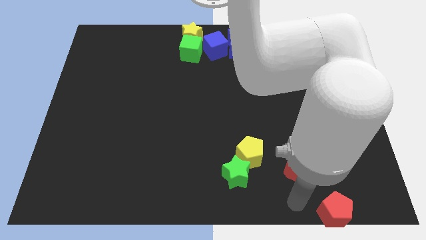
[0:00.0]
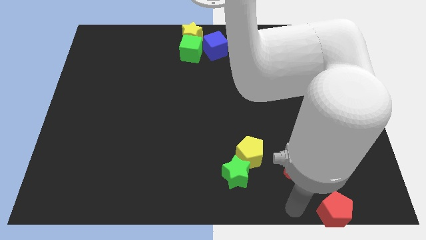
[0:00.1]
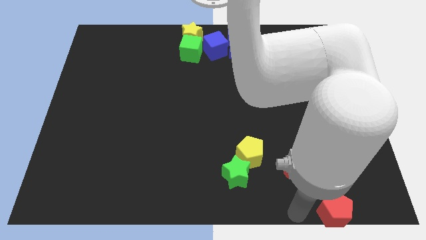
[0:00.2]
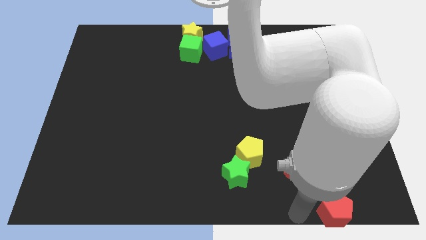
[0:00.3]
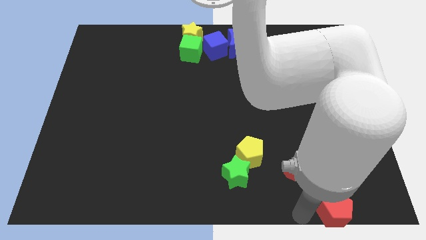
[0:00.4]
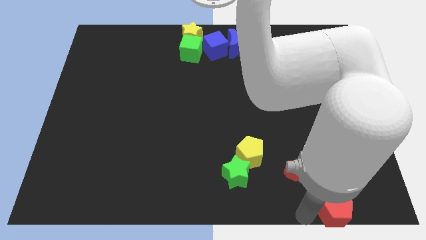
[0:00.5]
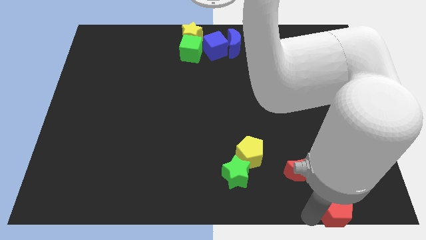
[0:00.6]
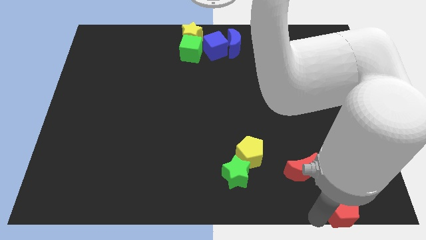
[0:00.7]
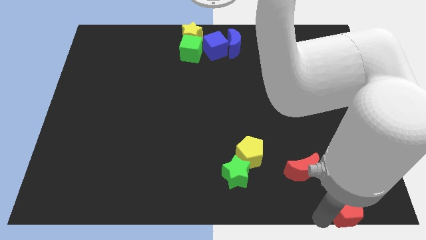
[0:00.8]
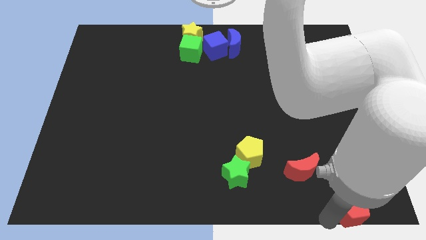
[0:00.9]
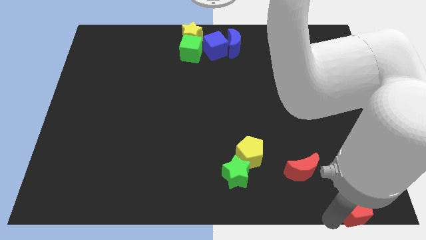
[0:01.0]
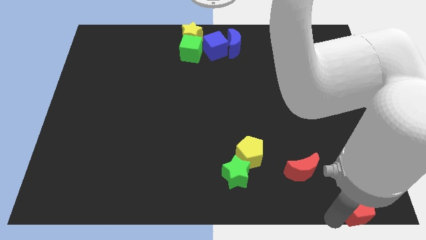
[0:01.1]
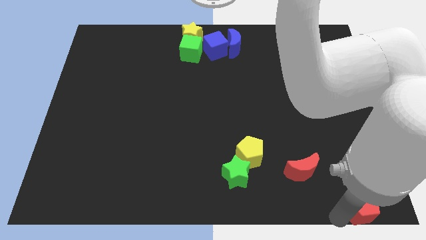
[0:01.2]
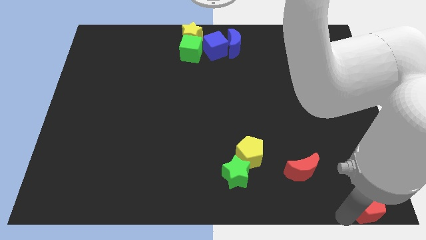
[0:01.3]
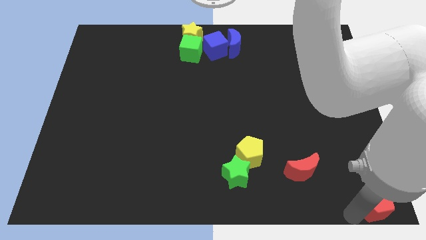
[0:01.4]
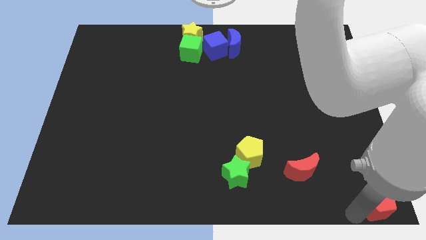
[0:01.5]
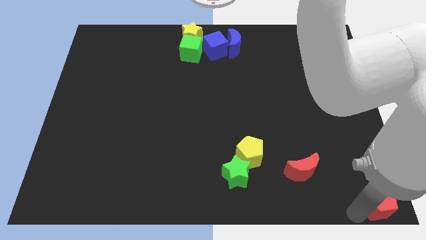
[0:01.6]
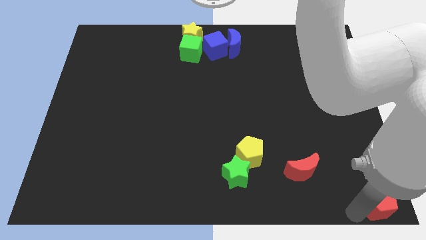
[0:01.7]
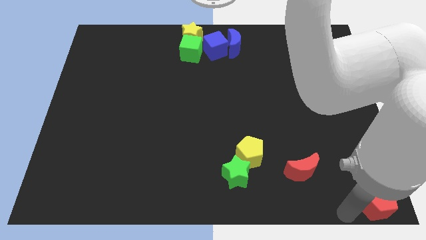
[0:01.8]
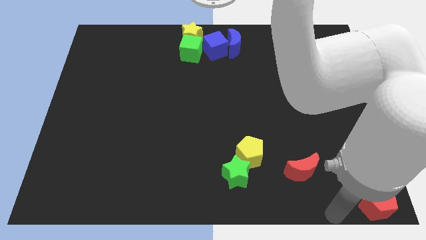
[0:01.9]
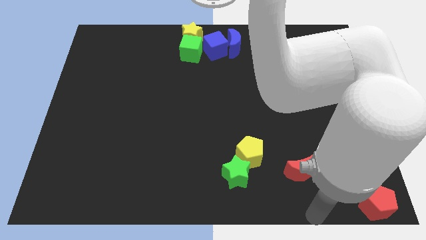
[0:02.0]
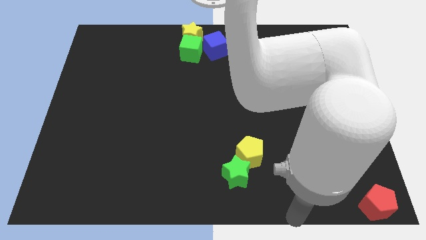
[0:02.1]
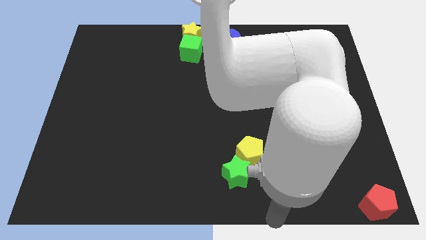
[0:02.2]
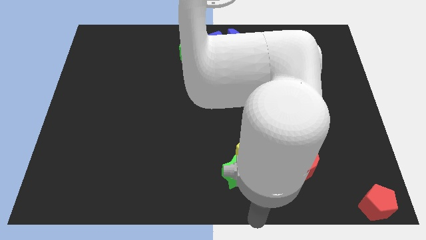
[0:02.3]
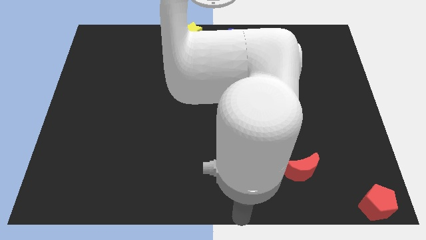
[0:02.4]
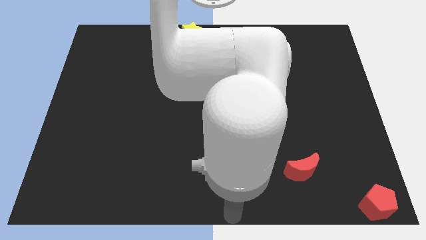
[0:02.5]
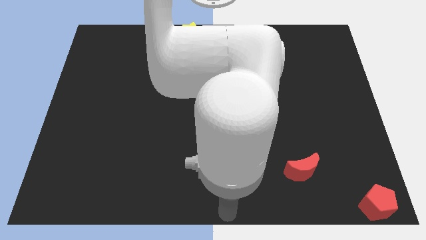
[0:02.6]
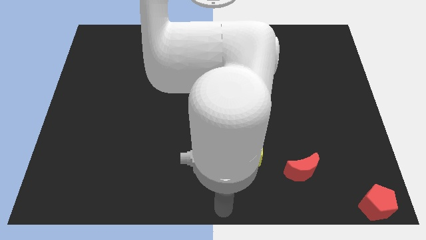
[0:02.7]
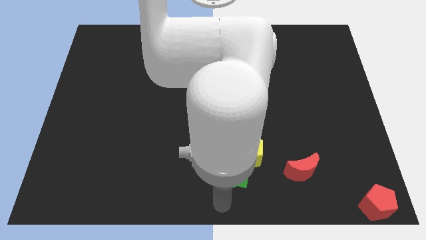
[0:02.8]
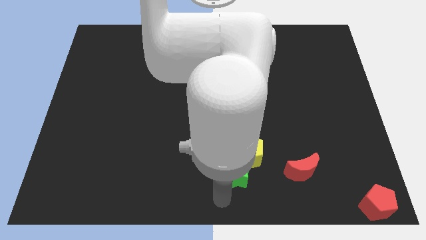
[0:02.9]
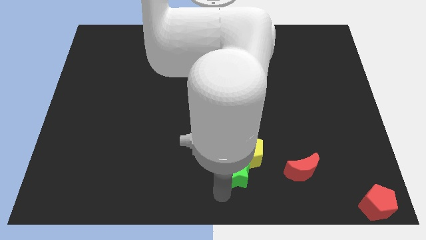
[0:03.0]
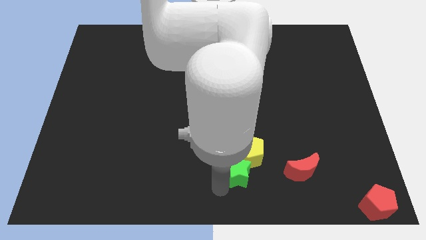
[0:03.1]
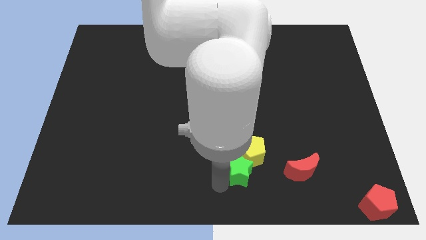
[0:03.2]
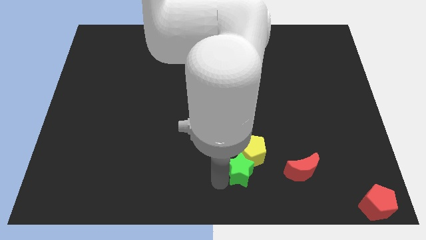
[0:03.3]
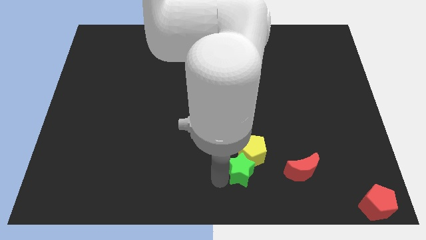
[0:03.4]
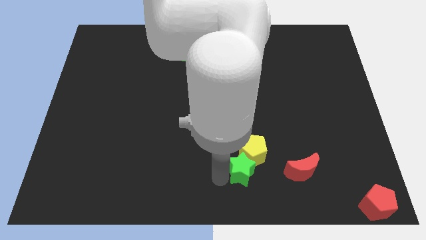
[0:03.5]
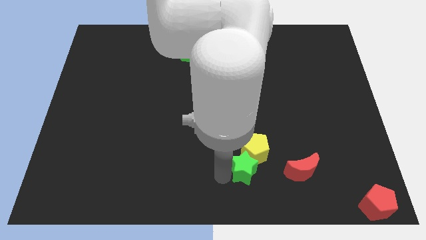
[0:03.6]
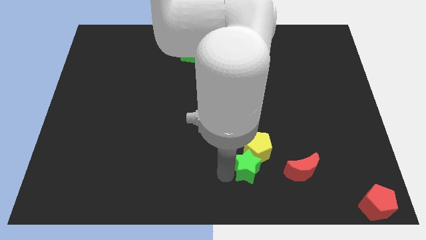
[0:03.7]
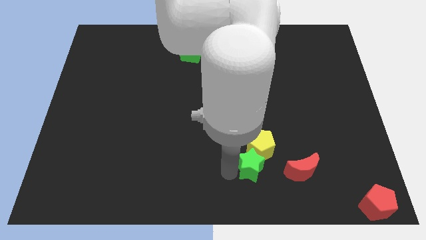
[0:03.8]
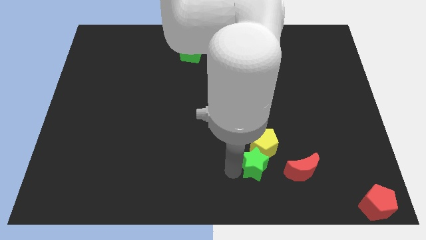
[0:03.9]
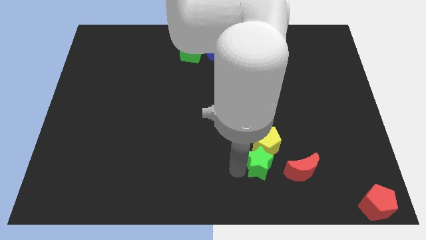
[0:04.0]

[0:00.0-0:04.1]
push red pentagon yellow pentagon green star towards right side of the board

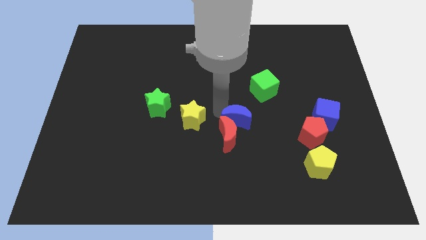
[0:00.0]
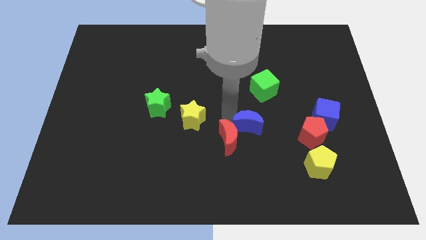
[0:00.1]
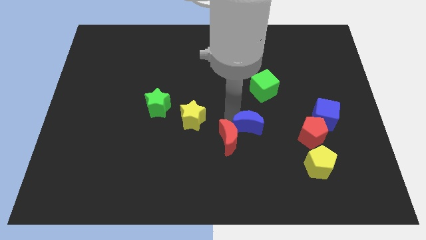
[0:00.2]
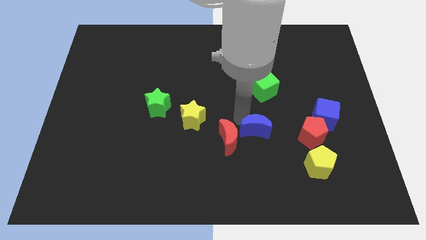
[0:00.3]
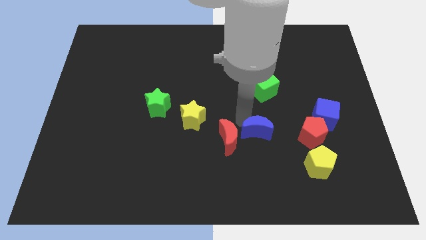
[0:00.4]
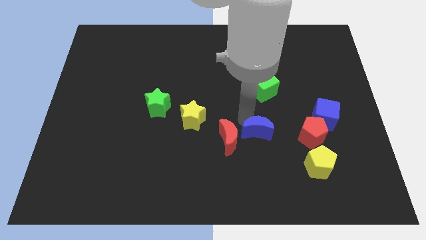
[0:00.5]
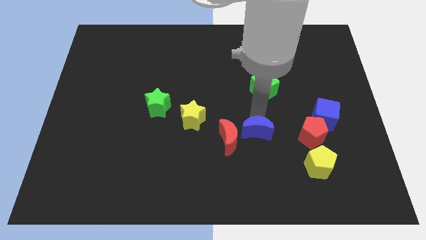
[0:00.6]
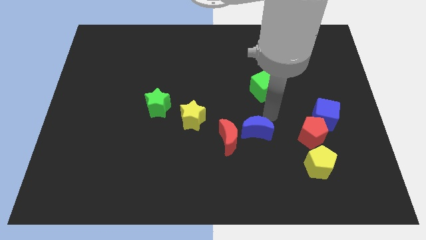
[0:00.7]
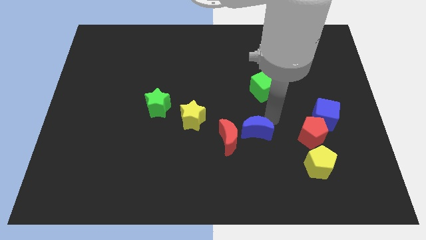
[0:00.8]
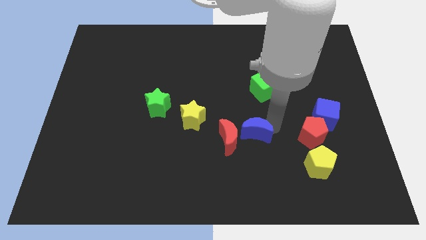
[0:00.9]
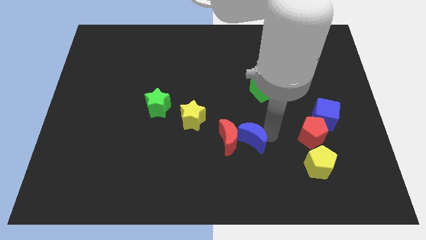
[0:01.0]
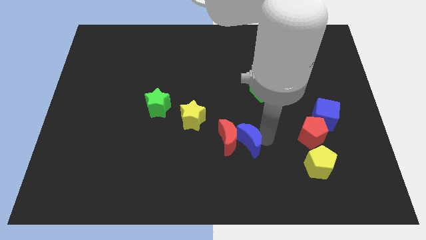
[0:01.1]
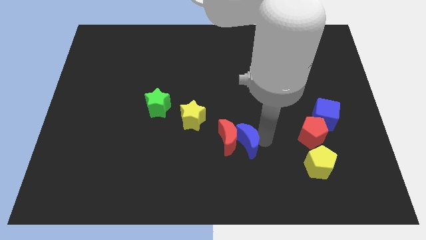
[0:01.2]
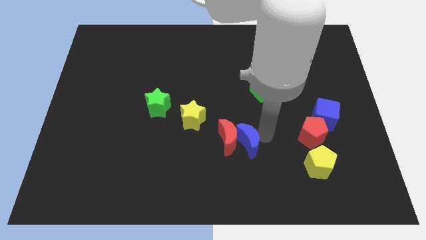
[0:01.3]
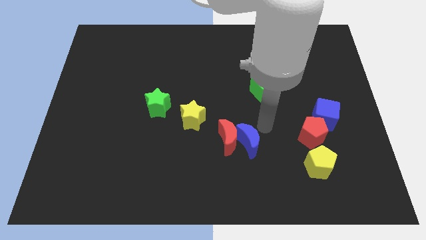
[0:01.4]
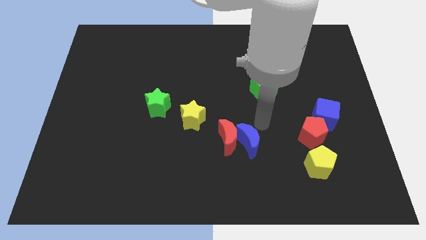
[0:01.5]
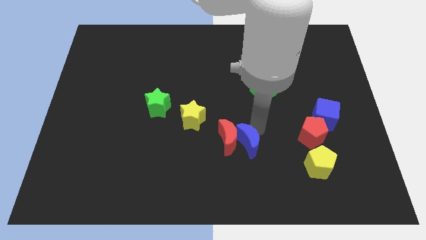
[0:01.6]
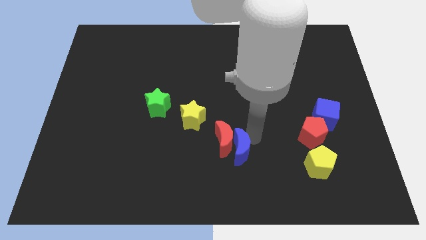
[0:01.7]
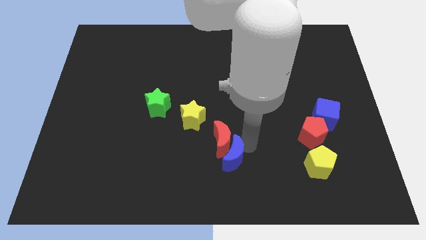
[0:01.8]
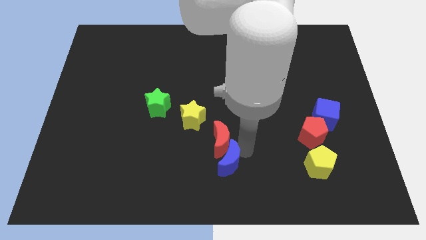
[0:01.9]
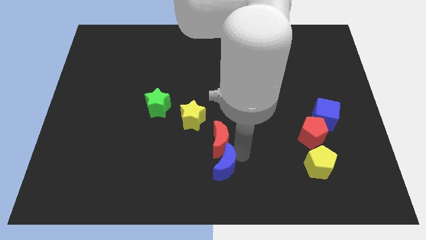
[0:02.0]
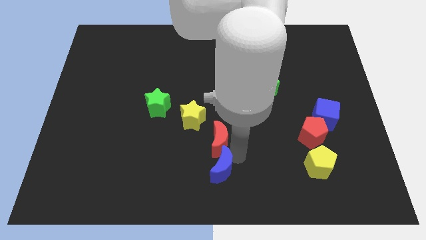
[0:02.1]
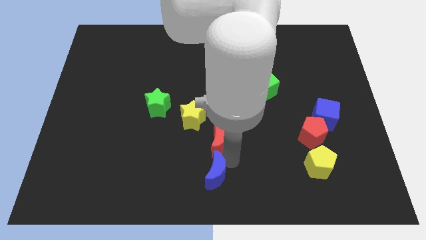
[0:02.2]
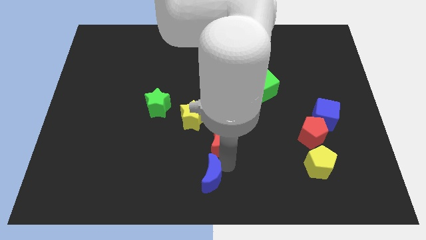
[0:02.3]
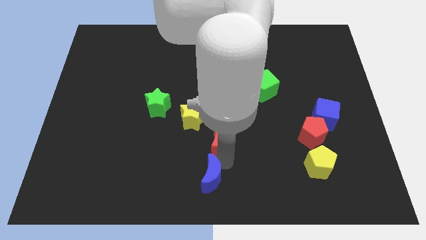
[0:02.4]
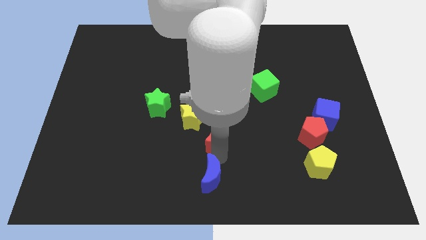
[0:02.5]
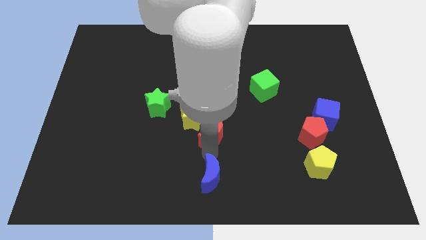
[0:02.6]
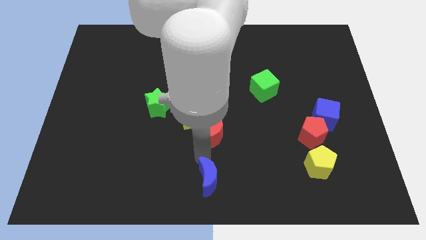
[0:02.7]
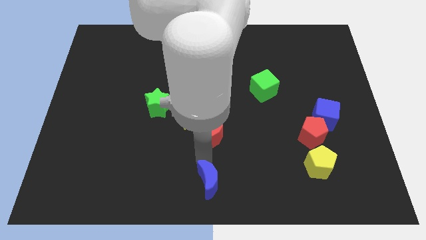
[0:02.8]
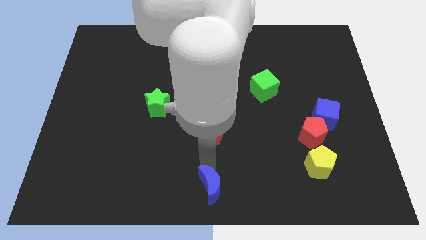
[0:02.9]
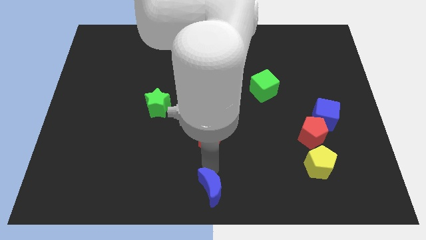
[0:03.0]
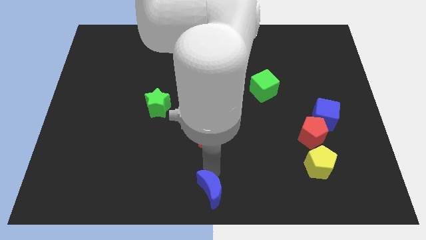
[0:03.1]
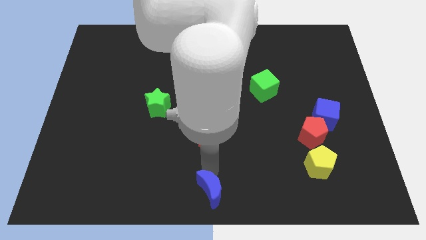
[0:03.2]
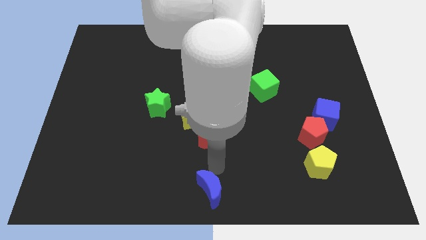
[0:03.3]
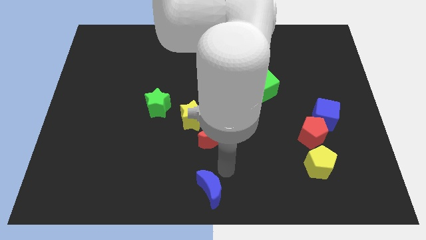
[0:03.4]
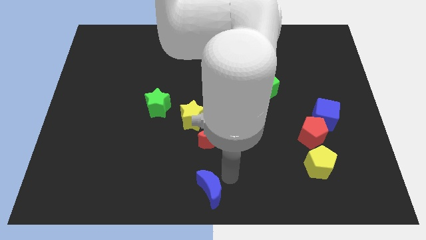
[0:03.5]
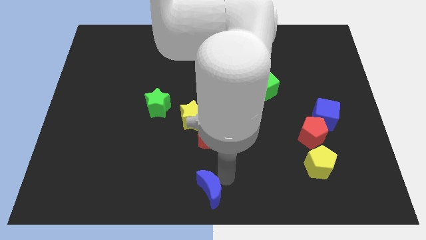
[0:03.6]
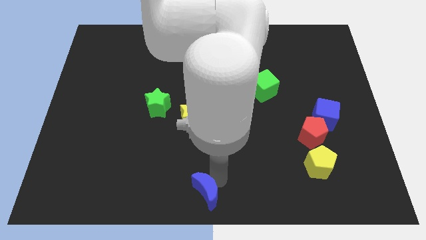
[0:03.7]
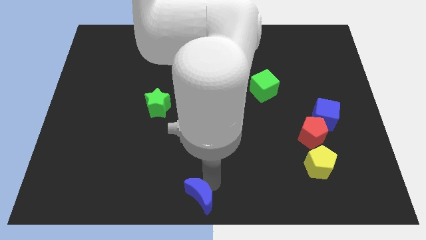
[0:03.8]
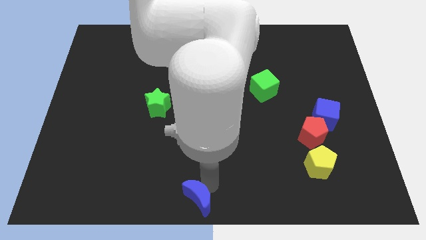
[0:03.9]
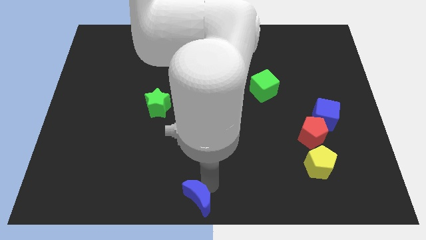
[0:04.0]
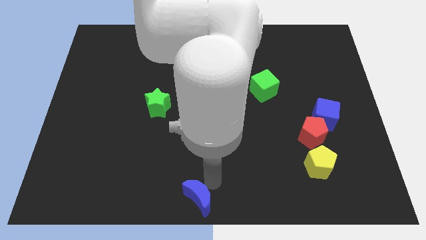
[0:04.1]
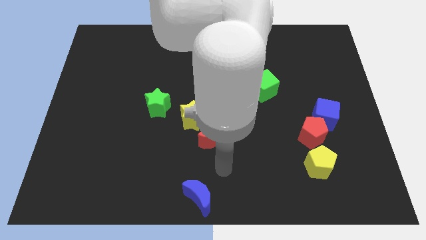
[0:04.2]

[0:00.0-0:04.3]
move the blue crescent to the bottom center of the board

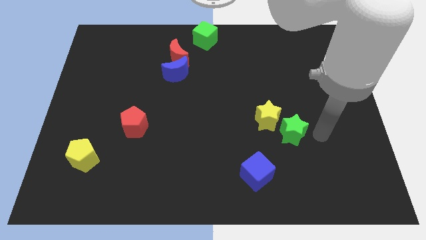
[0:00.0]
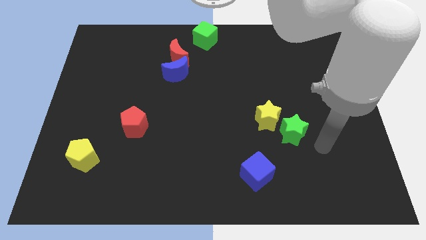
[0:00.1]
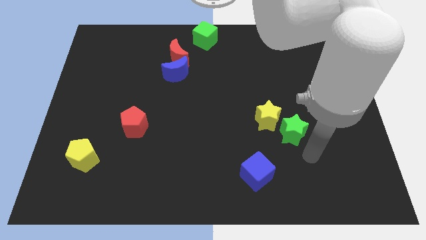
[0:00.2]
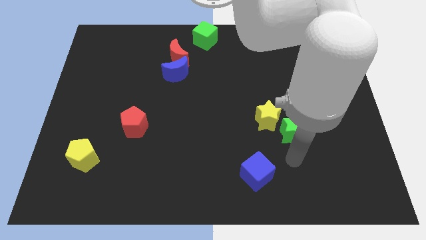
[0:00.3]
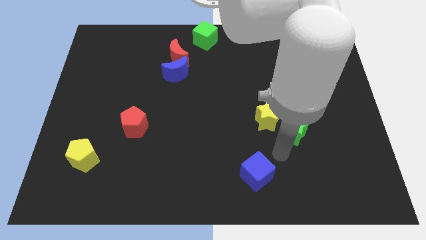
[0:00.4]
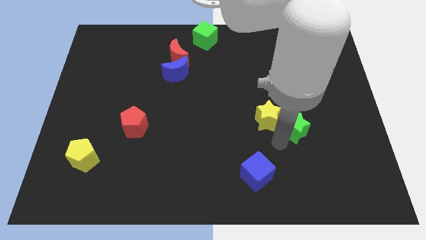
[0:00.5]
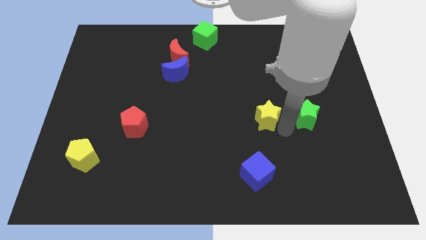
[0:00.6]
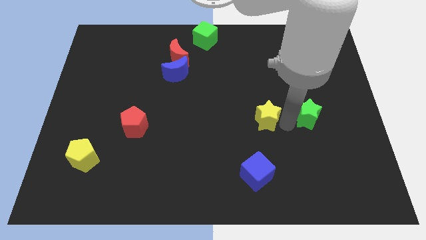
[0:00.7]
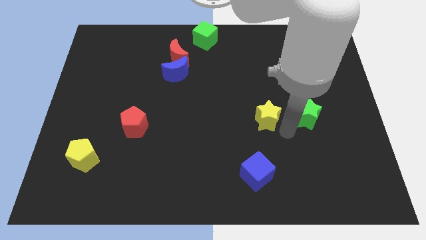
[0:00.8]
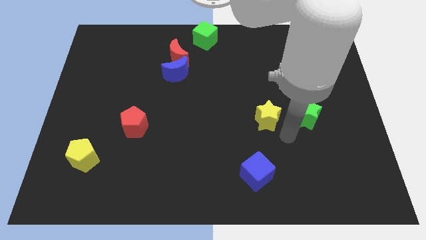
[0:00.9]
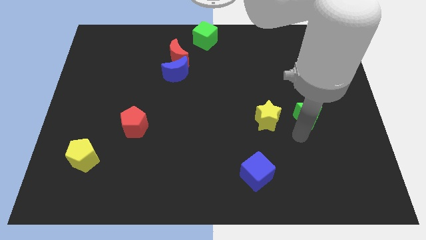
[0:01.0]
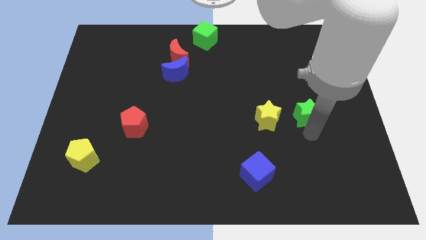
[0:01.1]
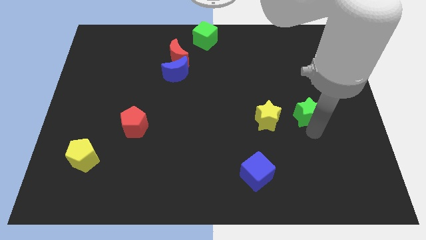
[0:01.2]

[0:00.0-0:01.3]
put the green star to the right side of the yellow star
